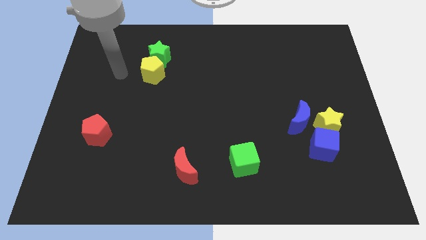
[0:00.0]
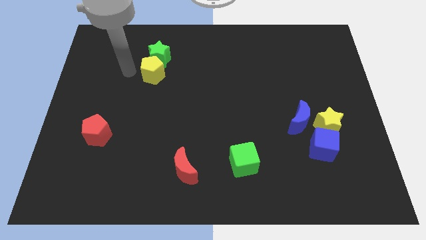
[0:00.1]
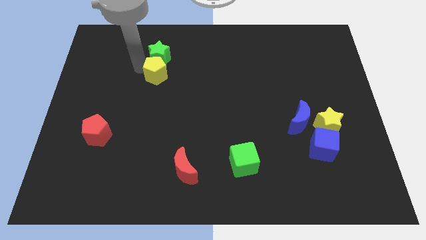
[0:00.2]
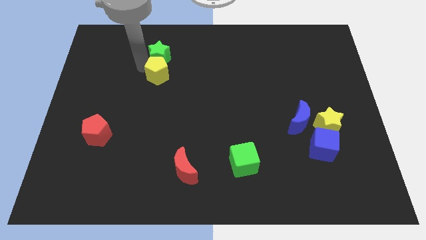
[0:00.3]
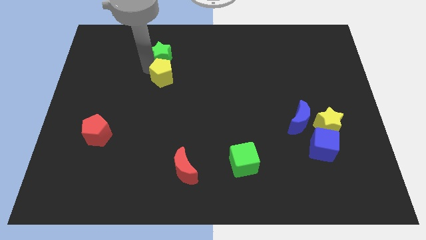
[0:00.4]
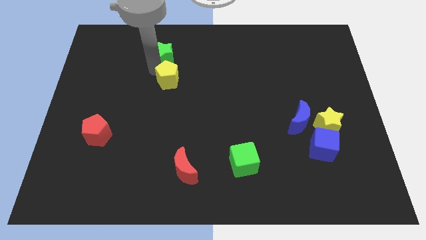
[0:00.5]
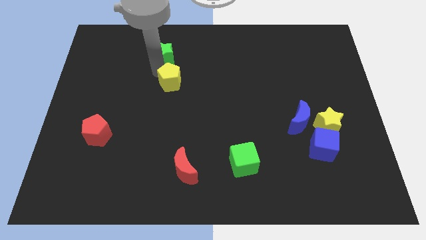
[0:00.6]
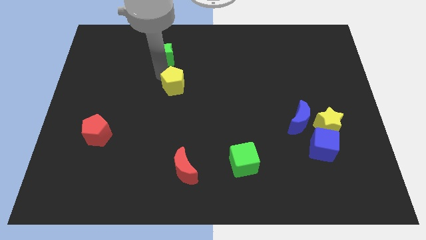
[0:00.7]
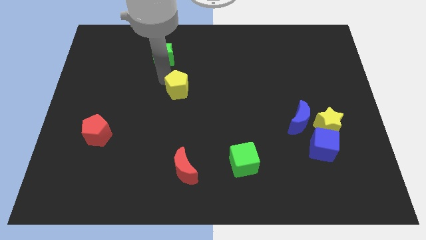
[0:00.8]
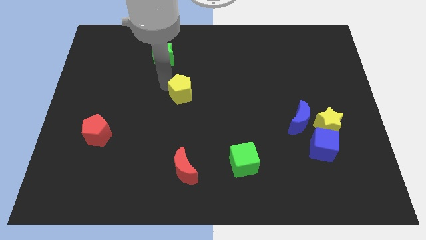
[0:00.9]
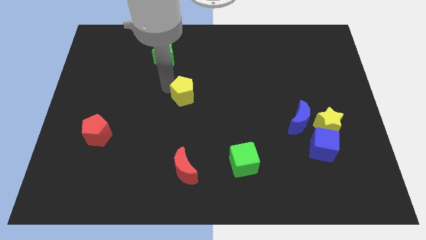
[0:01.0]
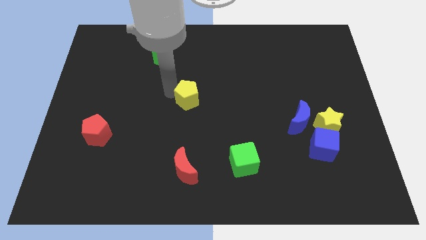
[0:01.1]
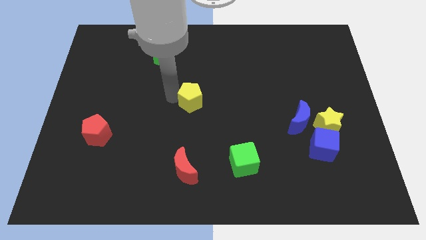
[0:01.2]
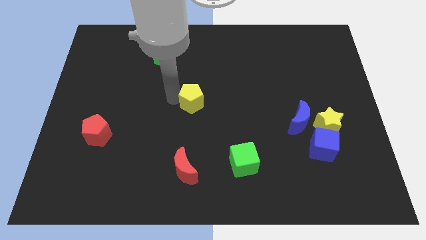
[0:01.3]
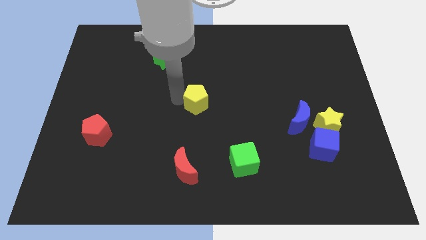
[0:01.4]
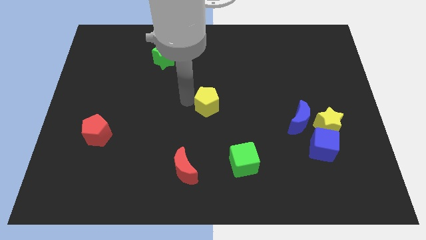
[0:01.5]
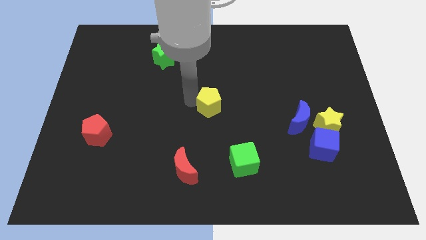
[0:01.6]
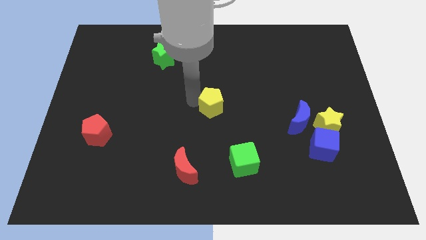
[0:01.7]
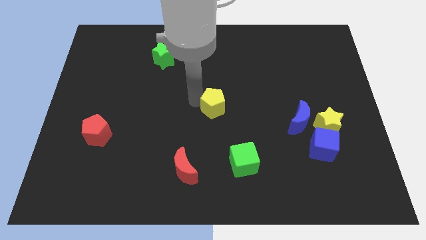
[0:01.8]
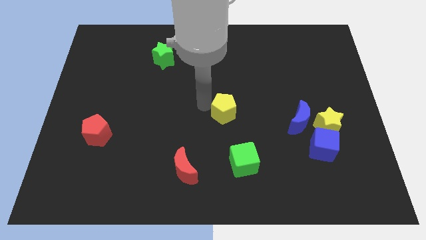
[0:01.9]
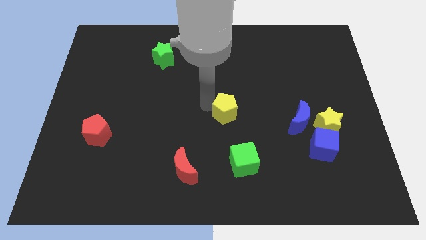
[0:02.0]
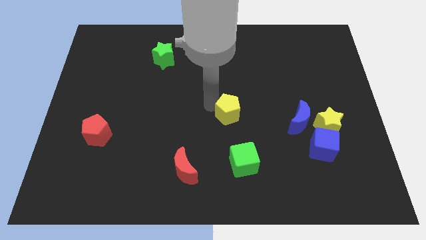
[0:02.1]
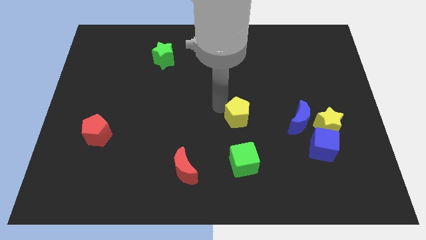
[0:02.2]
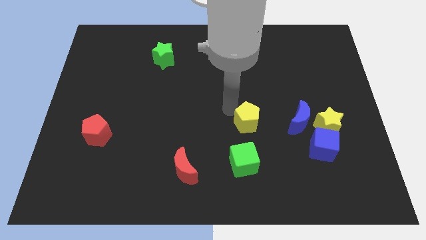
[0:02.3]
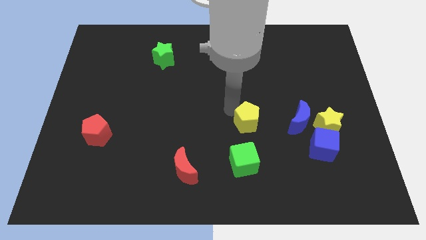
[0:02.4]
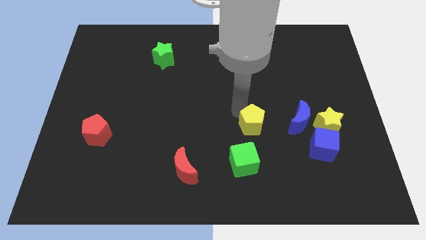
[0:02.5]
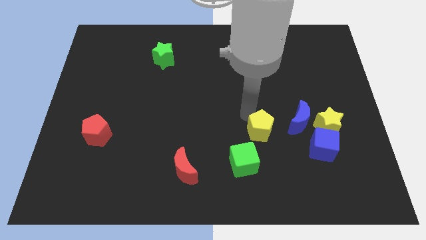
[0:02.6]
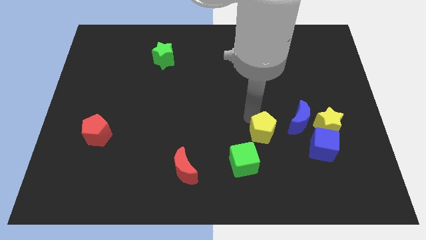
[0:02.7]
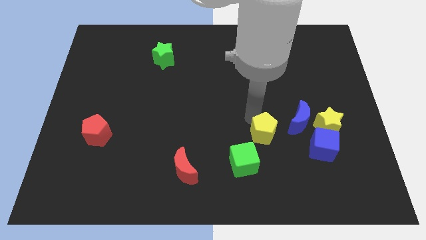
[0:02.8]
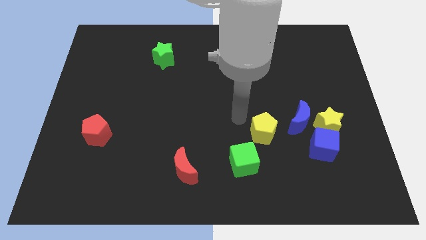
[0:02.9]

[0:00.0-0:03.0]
move the yellow pentagon to the left of the blue moon

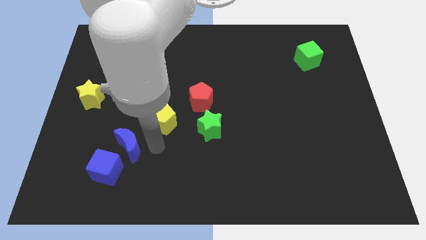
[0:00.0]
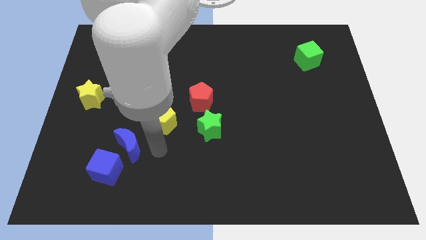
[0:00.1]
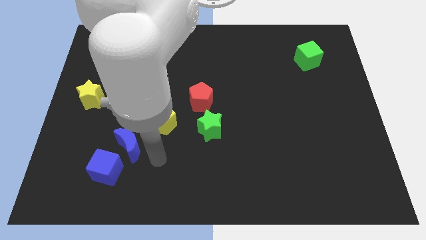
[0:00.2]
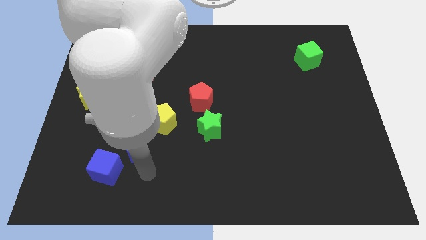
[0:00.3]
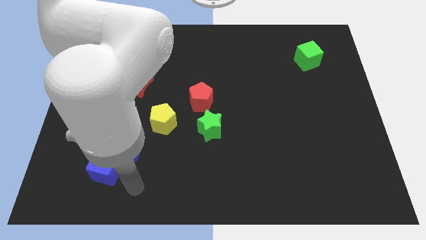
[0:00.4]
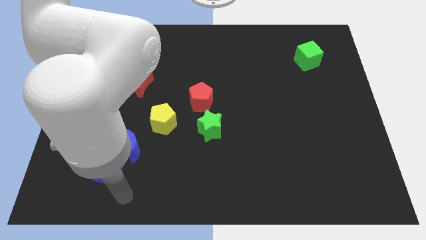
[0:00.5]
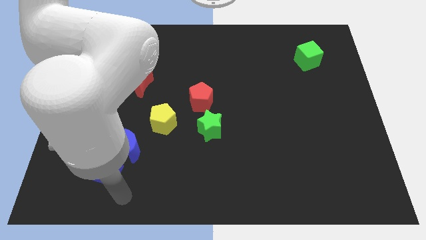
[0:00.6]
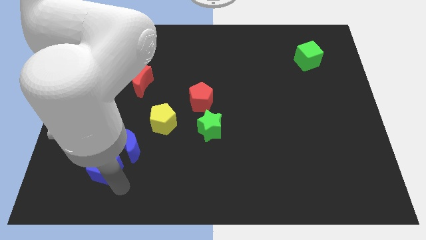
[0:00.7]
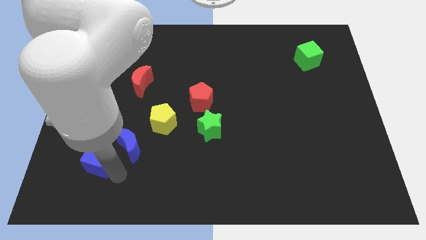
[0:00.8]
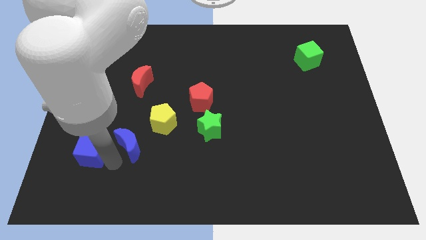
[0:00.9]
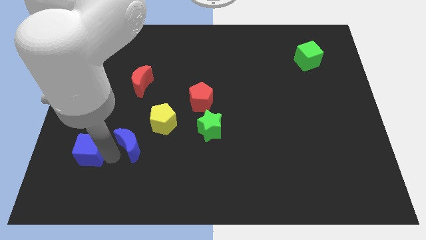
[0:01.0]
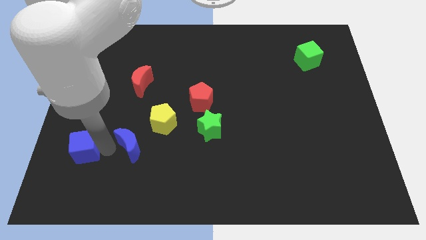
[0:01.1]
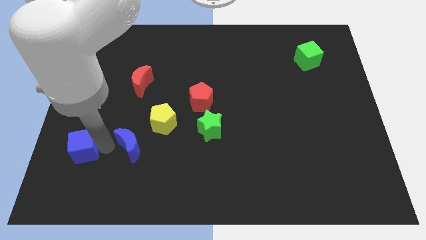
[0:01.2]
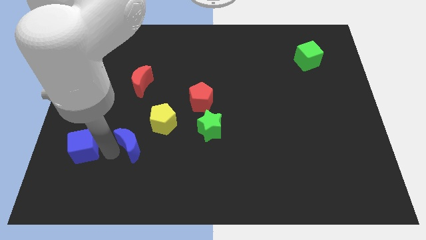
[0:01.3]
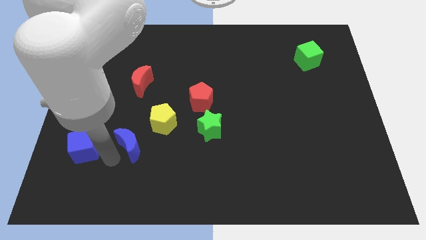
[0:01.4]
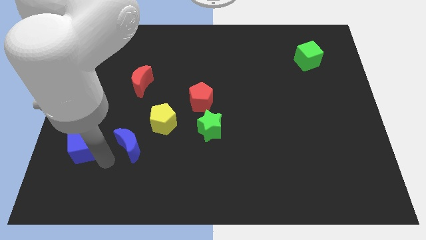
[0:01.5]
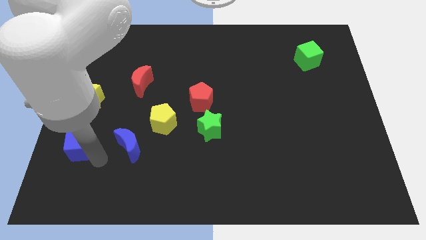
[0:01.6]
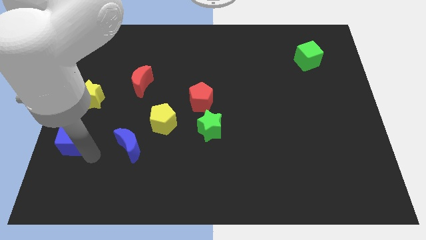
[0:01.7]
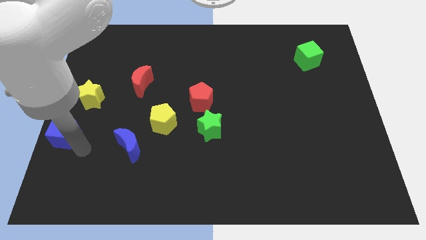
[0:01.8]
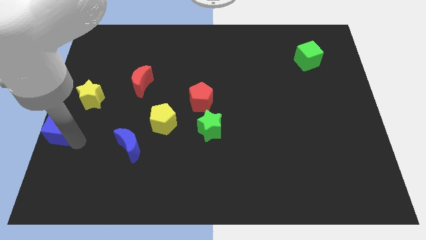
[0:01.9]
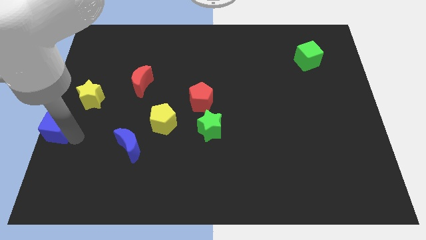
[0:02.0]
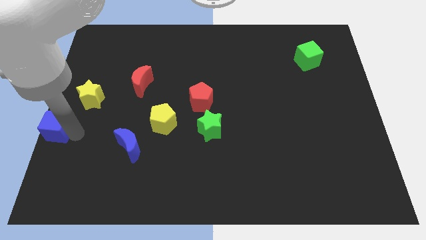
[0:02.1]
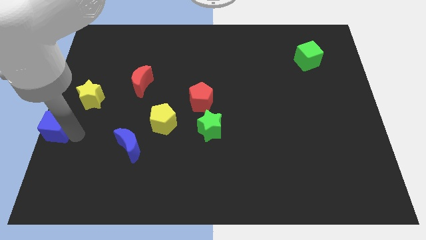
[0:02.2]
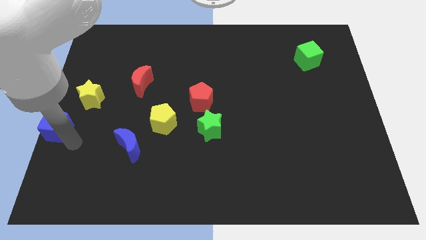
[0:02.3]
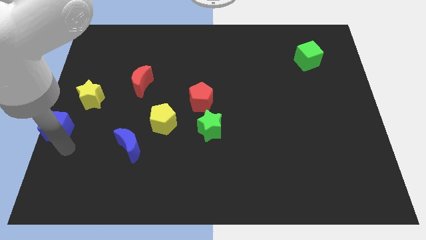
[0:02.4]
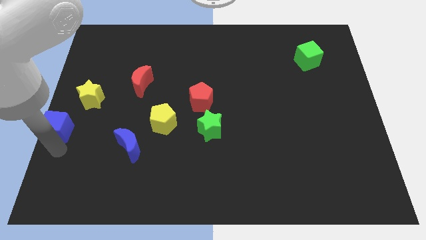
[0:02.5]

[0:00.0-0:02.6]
move the blue cube to the left of the blue moon

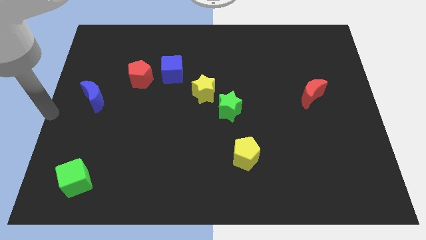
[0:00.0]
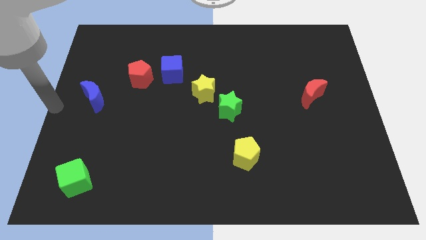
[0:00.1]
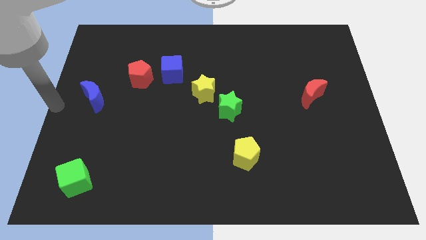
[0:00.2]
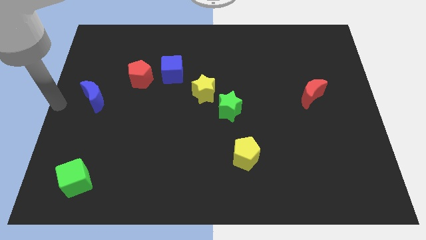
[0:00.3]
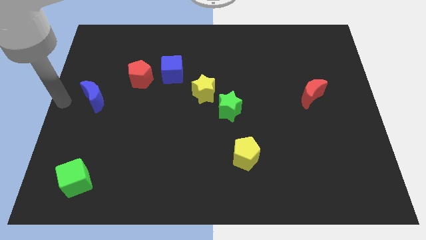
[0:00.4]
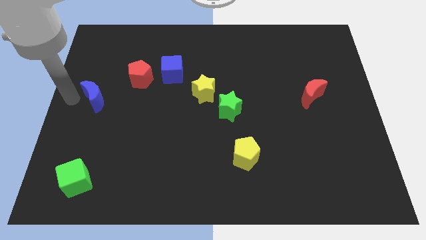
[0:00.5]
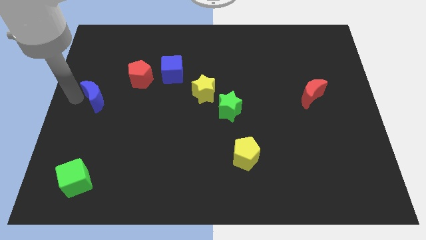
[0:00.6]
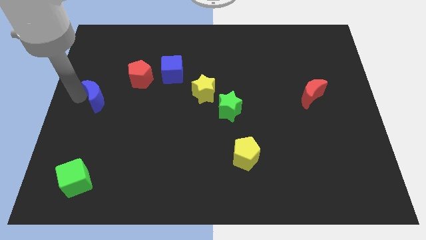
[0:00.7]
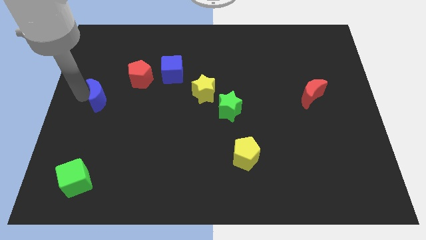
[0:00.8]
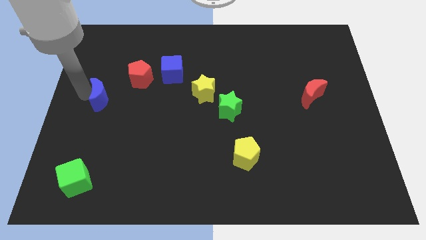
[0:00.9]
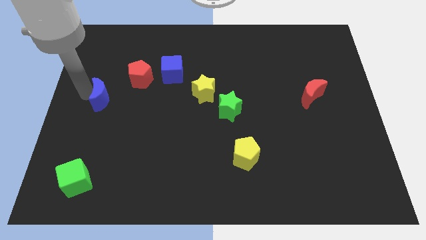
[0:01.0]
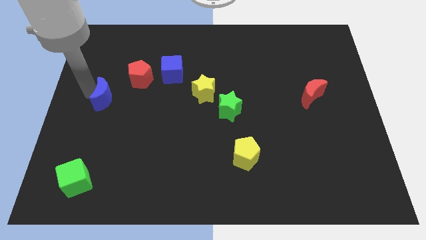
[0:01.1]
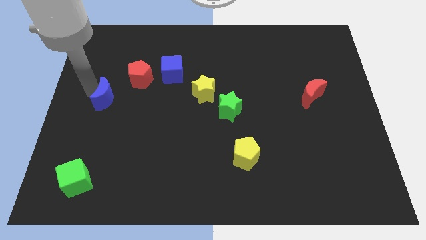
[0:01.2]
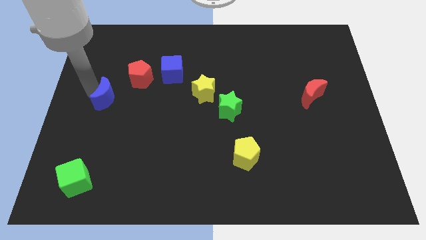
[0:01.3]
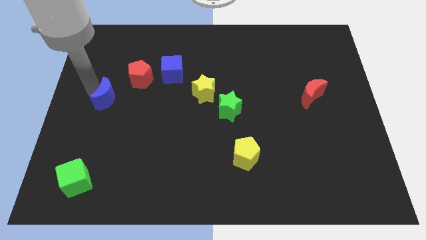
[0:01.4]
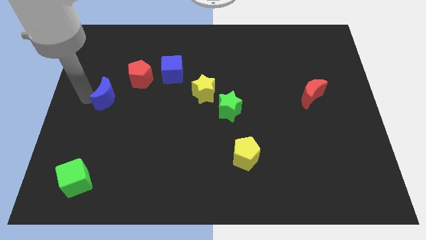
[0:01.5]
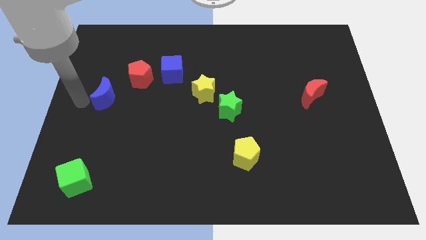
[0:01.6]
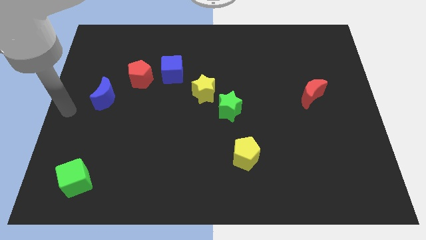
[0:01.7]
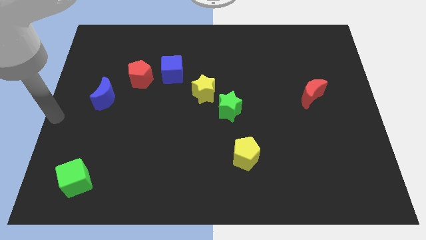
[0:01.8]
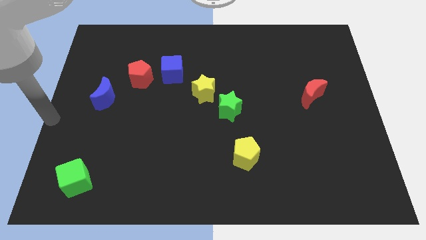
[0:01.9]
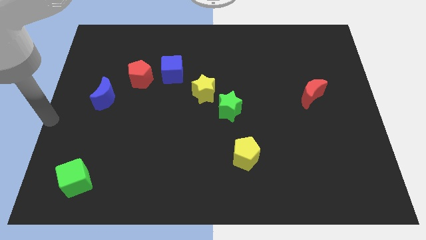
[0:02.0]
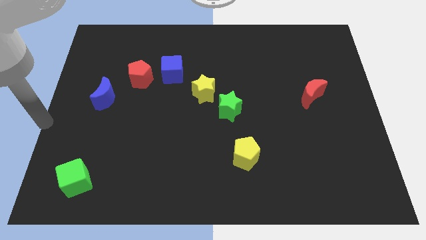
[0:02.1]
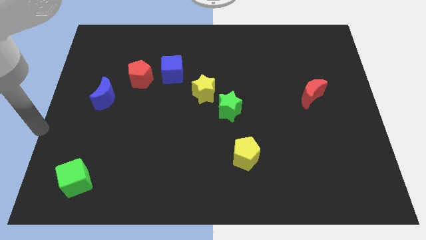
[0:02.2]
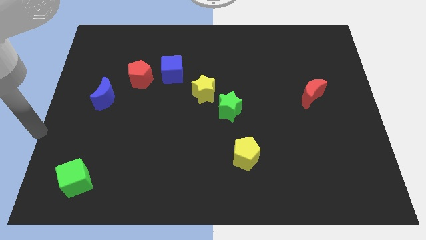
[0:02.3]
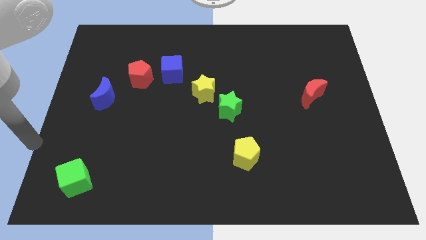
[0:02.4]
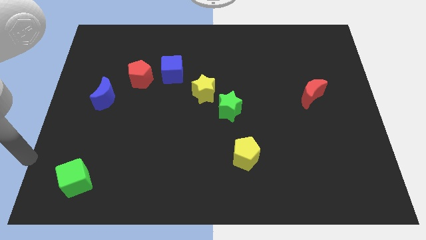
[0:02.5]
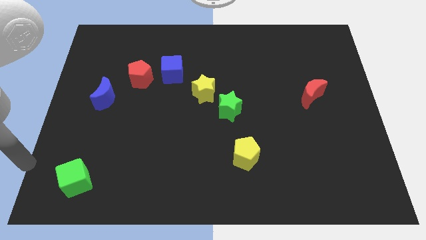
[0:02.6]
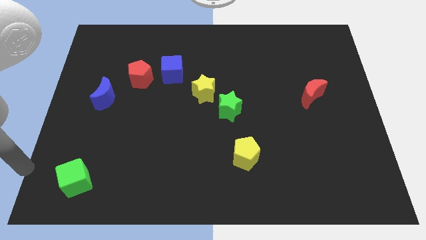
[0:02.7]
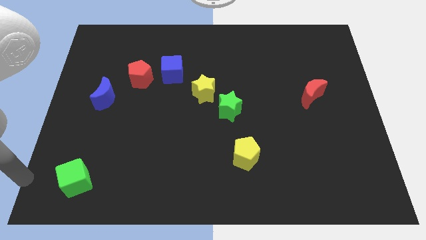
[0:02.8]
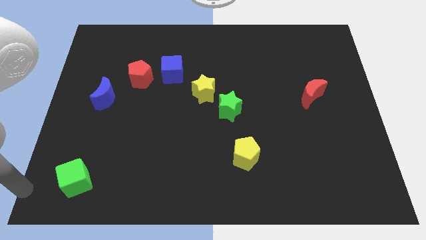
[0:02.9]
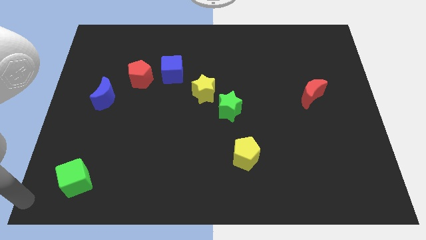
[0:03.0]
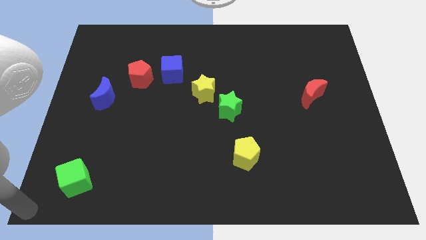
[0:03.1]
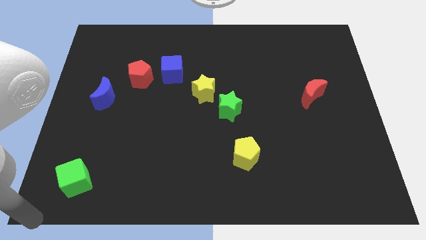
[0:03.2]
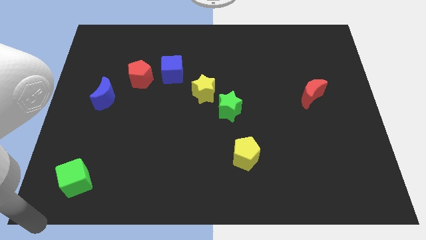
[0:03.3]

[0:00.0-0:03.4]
slightly push the blue crescent on the board
